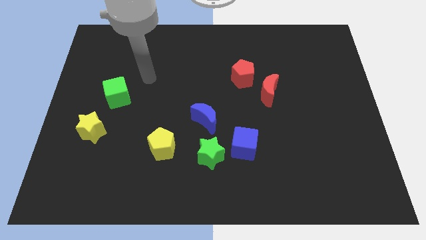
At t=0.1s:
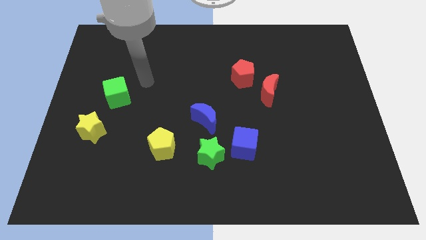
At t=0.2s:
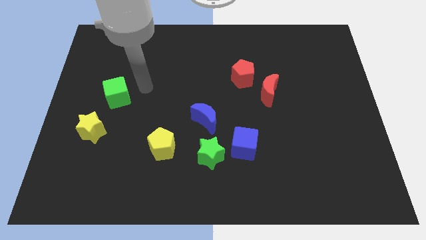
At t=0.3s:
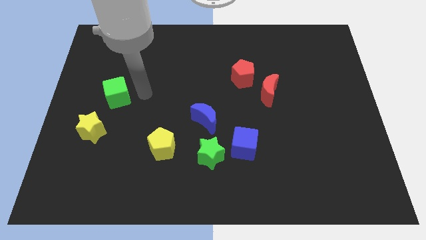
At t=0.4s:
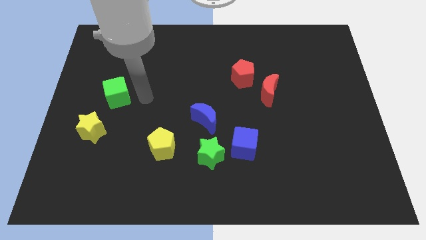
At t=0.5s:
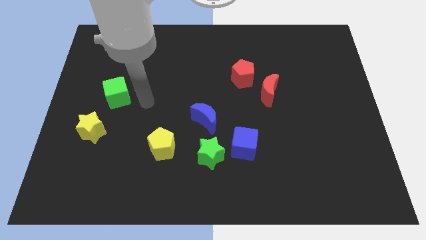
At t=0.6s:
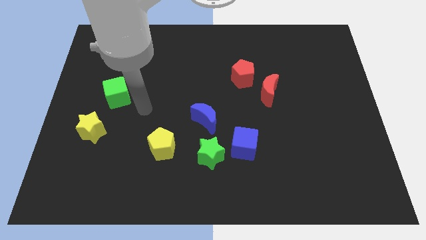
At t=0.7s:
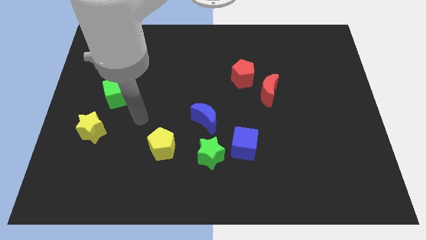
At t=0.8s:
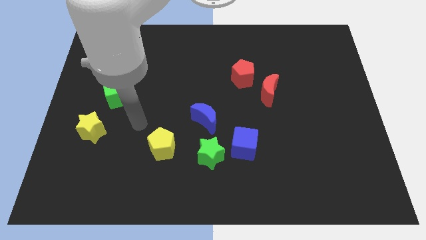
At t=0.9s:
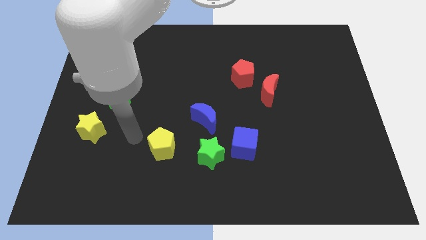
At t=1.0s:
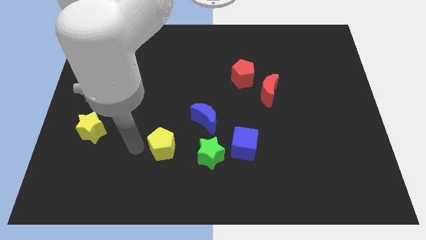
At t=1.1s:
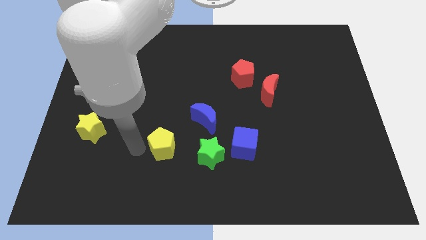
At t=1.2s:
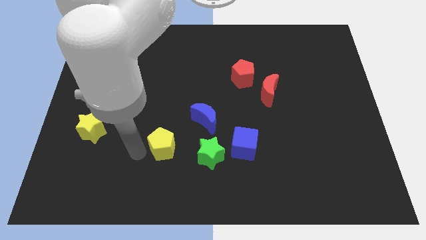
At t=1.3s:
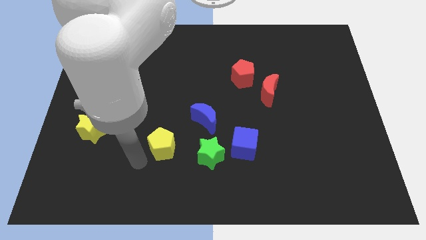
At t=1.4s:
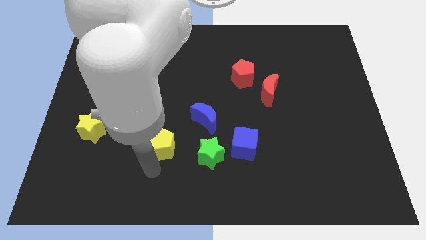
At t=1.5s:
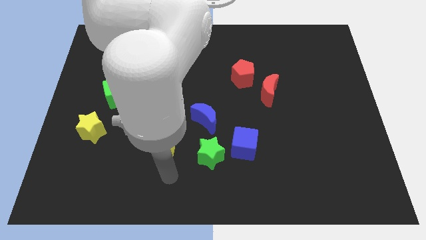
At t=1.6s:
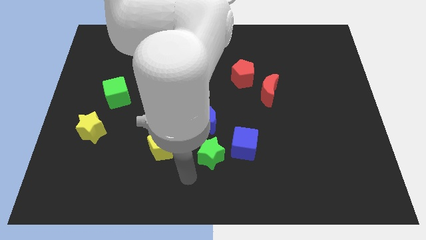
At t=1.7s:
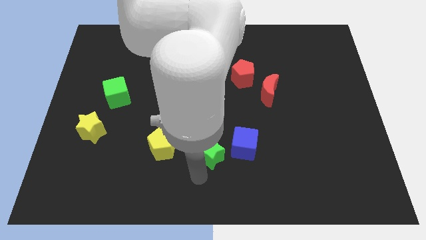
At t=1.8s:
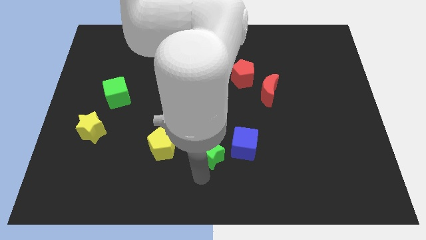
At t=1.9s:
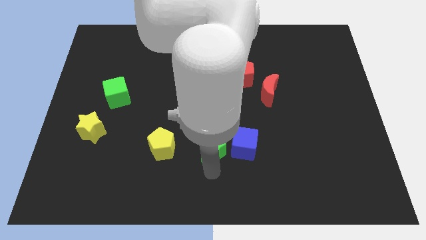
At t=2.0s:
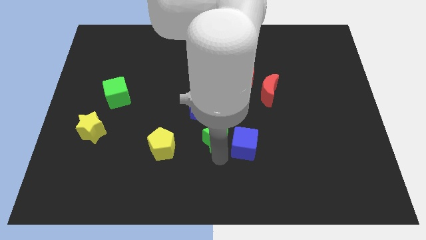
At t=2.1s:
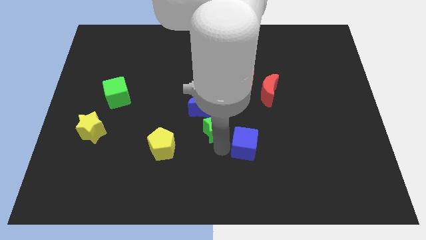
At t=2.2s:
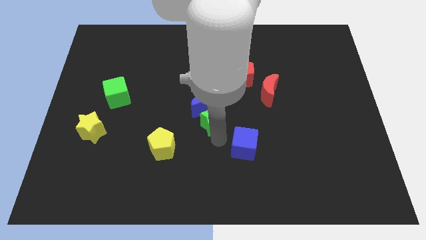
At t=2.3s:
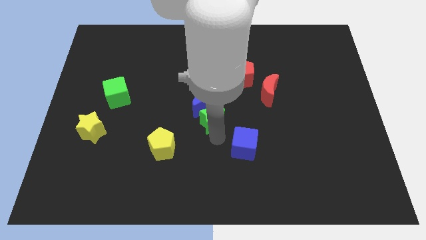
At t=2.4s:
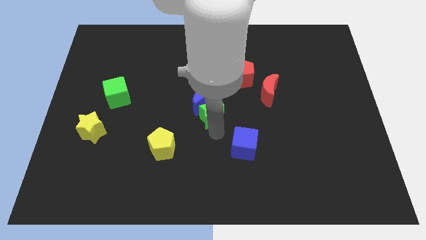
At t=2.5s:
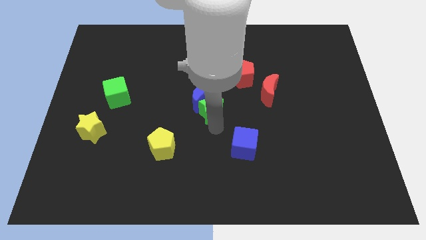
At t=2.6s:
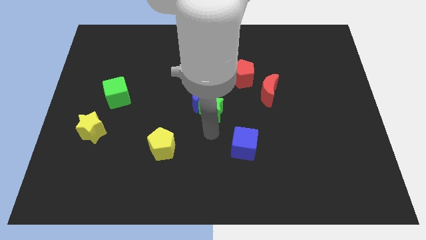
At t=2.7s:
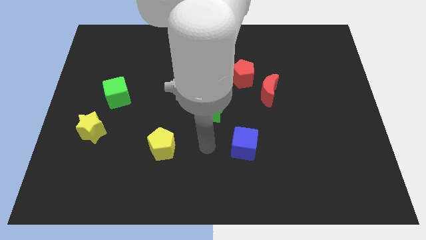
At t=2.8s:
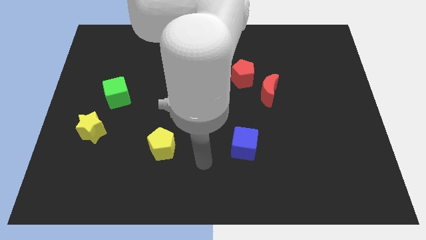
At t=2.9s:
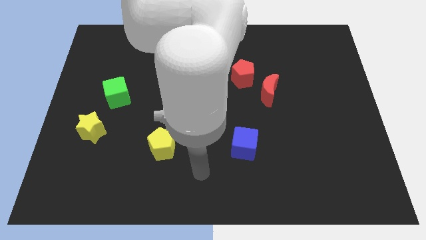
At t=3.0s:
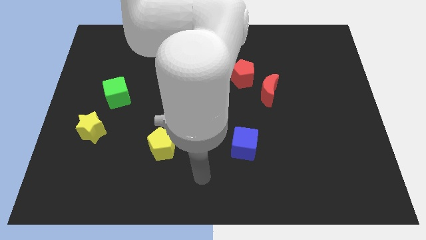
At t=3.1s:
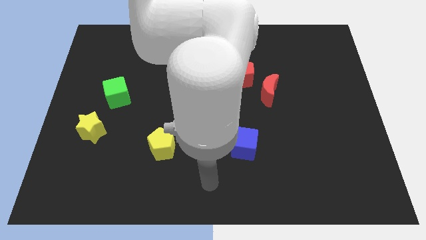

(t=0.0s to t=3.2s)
push the green star and the blue moon towards the center of the board

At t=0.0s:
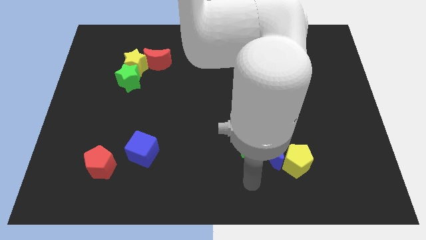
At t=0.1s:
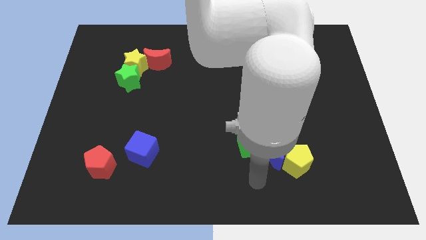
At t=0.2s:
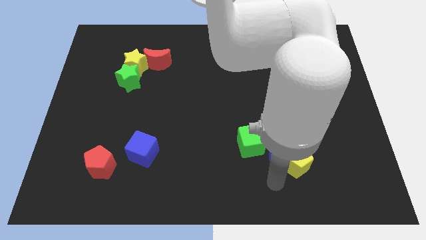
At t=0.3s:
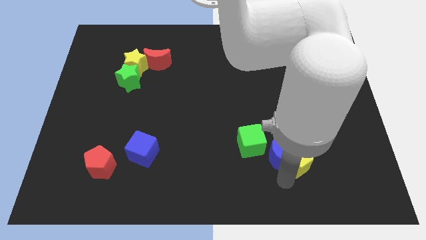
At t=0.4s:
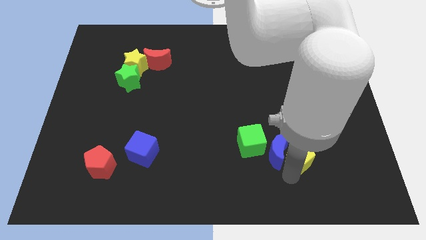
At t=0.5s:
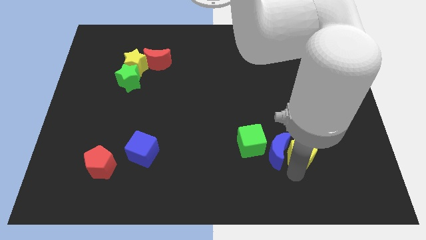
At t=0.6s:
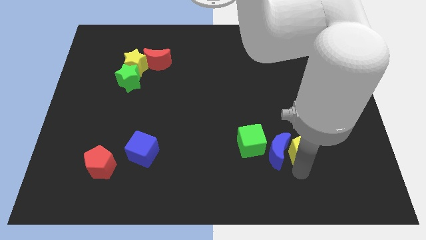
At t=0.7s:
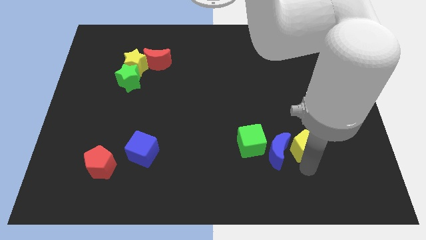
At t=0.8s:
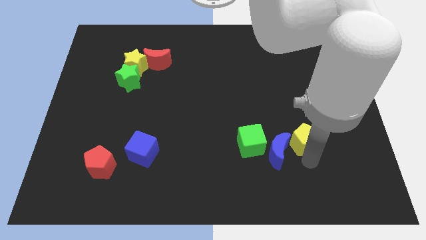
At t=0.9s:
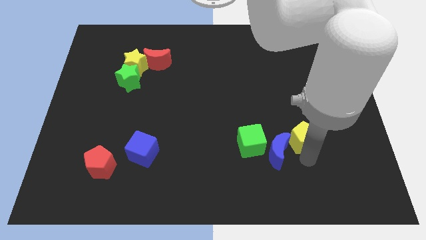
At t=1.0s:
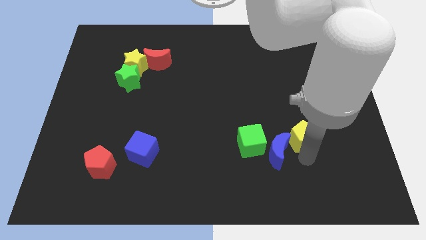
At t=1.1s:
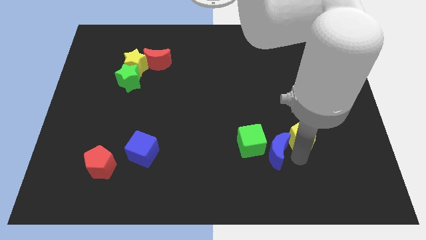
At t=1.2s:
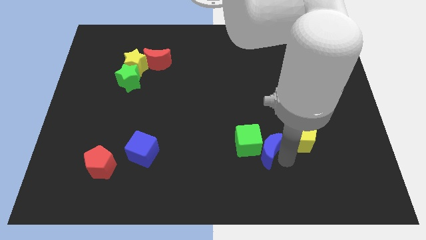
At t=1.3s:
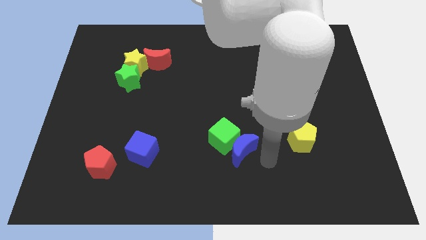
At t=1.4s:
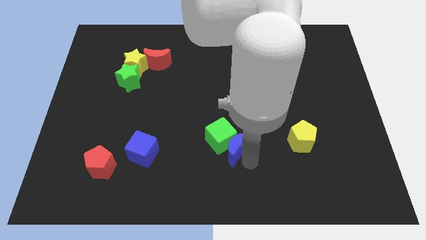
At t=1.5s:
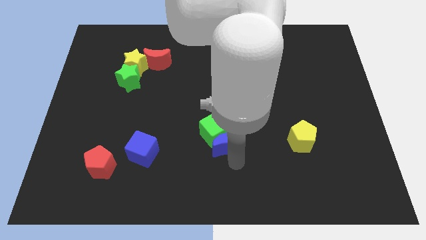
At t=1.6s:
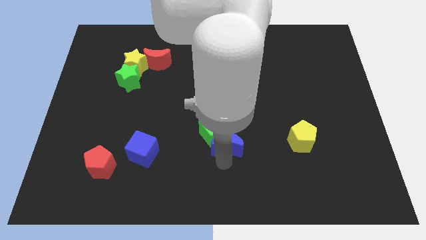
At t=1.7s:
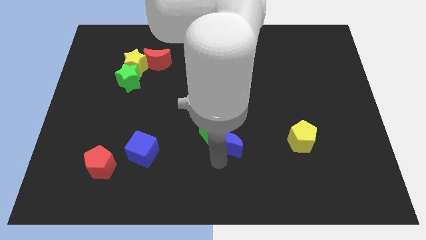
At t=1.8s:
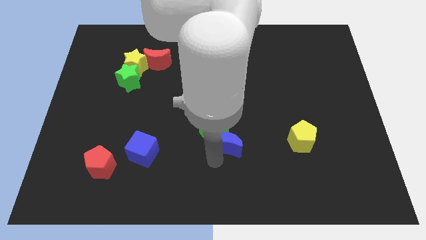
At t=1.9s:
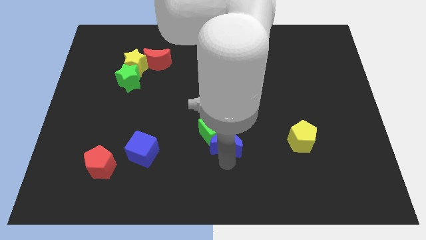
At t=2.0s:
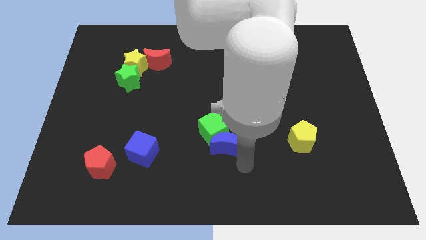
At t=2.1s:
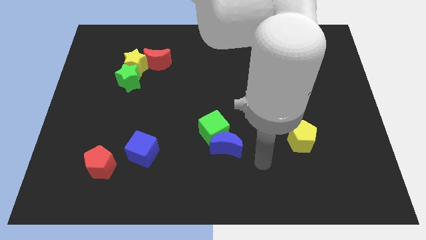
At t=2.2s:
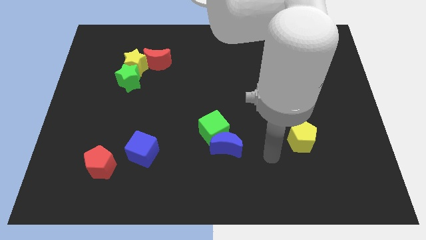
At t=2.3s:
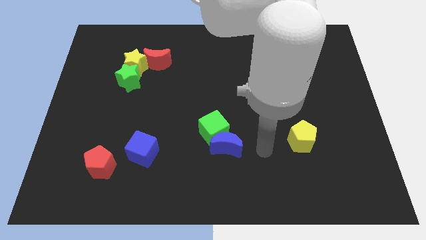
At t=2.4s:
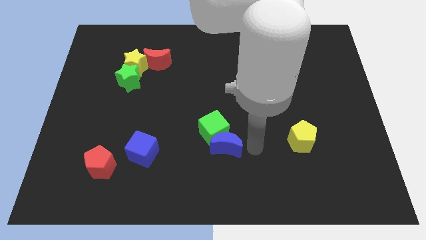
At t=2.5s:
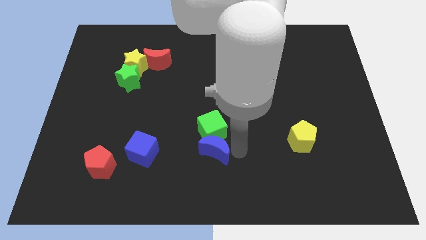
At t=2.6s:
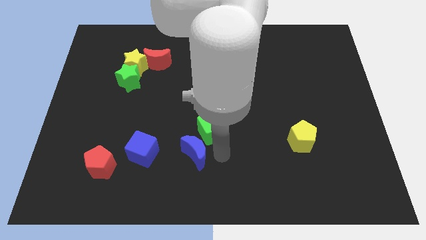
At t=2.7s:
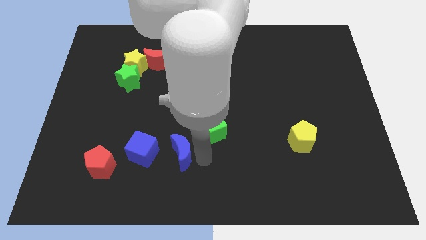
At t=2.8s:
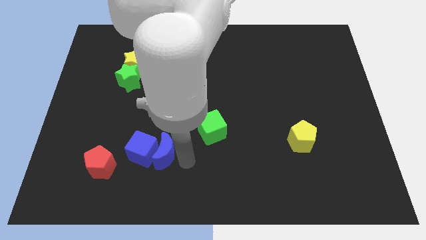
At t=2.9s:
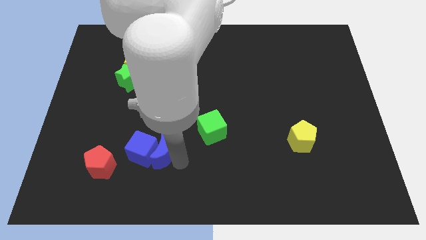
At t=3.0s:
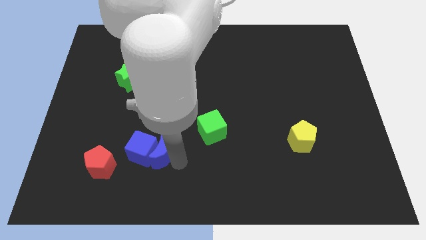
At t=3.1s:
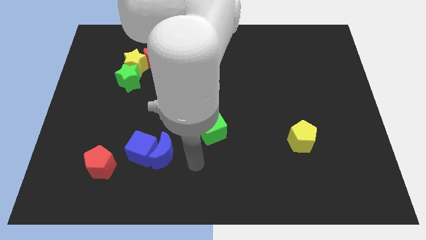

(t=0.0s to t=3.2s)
place blue crescent close to blue cube

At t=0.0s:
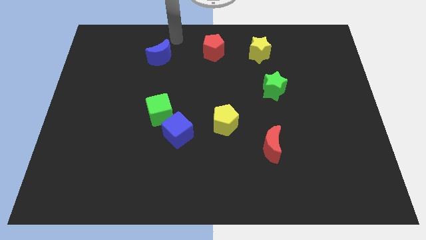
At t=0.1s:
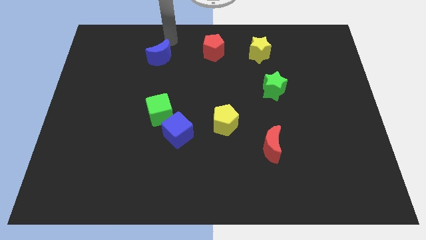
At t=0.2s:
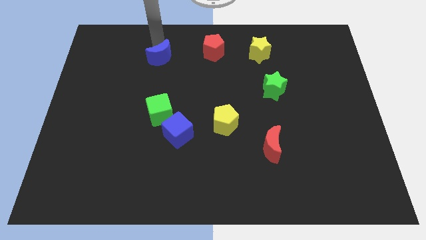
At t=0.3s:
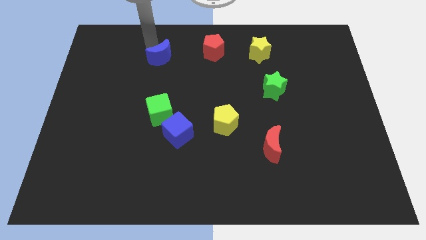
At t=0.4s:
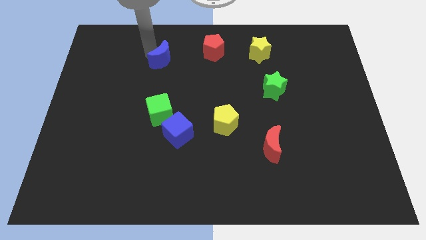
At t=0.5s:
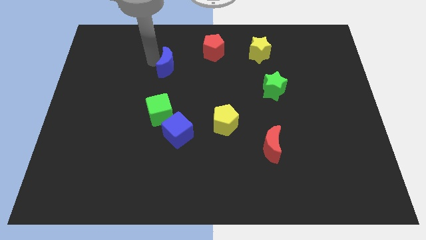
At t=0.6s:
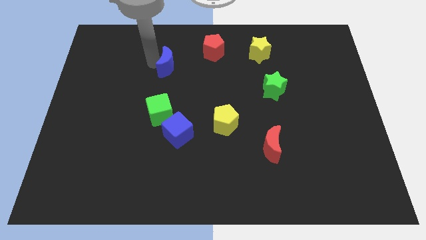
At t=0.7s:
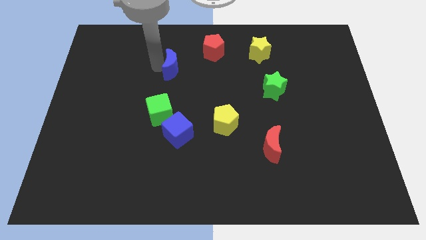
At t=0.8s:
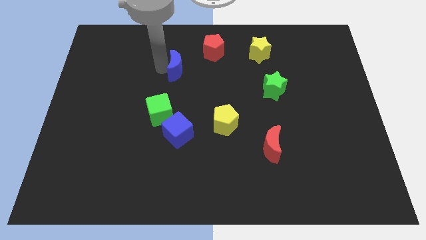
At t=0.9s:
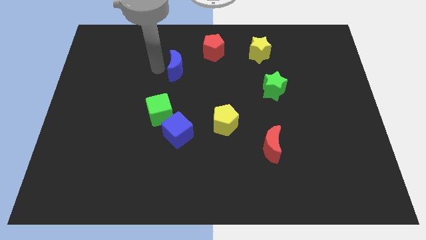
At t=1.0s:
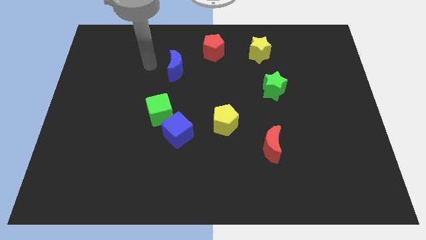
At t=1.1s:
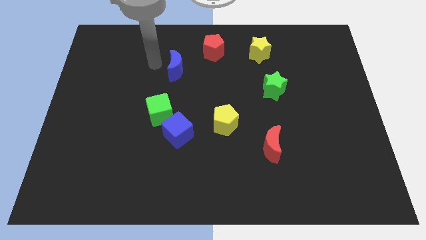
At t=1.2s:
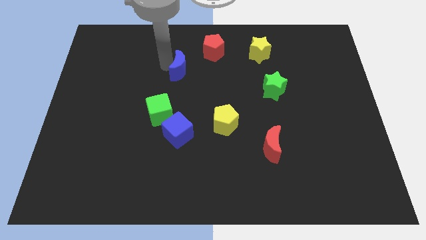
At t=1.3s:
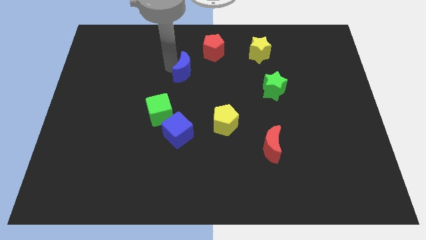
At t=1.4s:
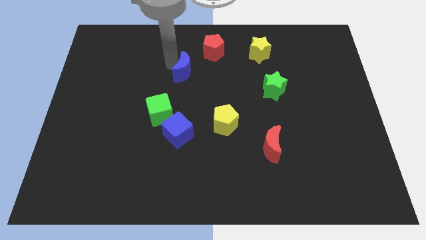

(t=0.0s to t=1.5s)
place the blue crescent towards the bottom left side of the board

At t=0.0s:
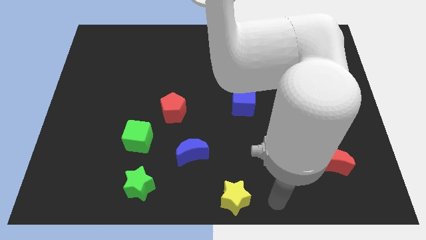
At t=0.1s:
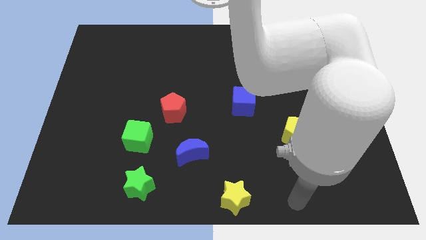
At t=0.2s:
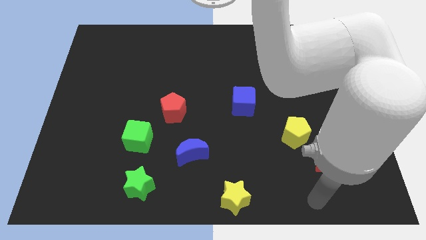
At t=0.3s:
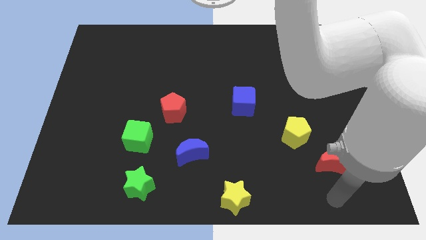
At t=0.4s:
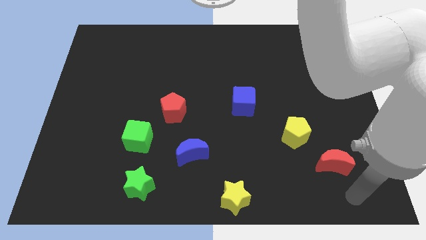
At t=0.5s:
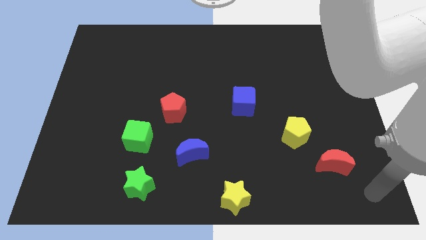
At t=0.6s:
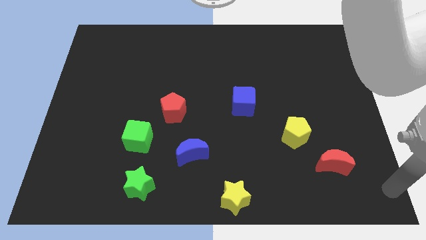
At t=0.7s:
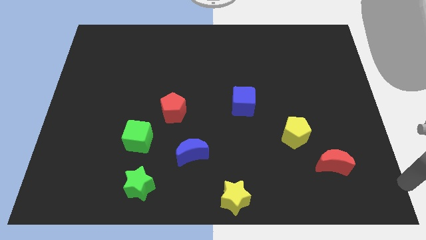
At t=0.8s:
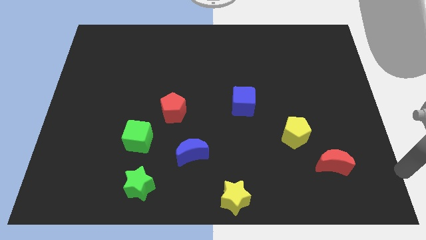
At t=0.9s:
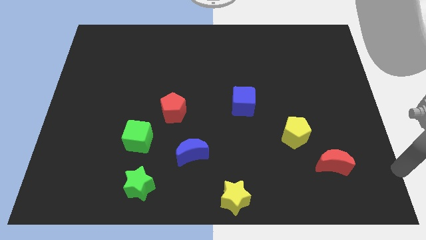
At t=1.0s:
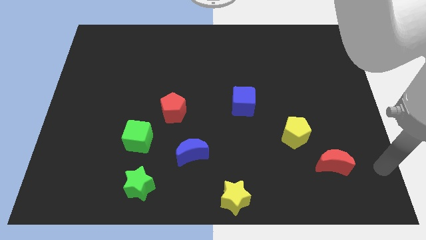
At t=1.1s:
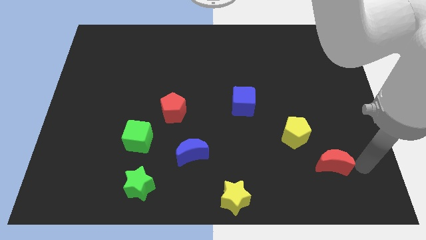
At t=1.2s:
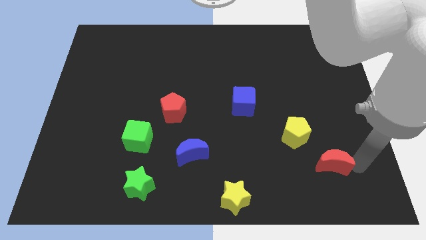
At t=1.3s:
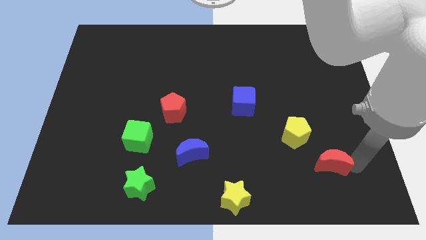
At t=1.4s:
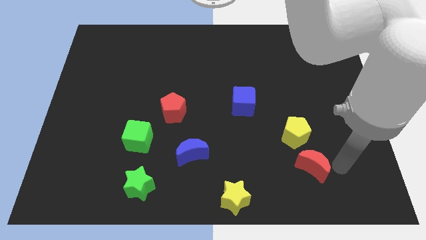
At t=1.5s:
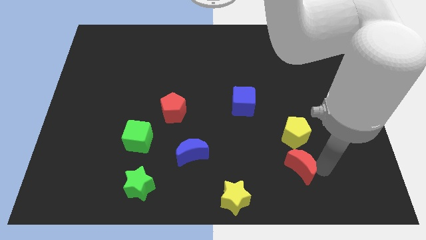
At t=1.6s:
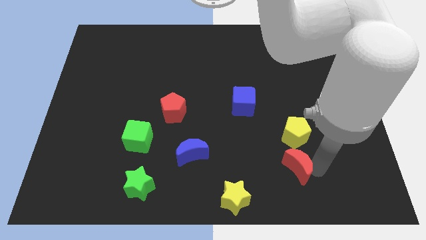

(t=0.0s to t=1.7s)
push the red crescent below the yellow pentagon
